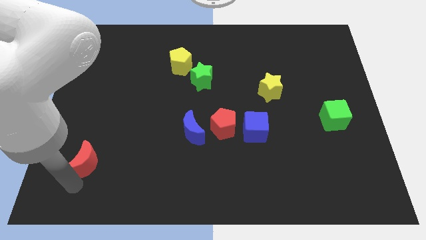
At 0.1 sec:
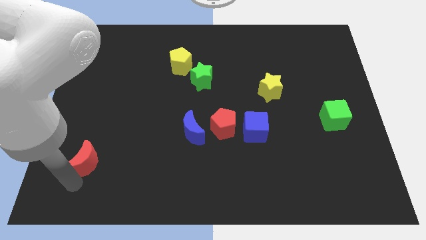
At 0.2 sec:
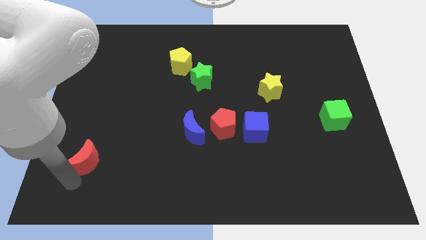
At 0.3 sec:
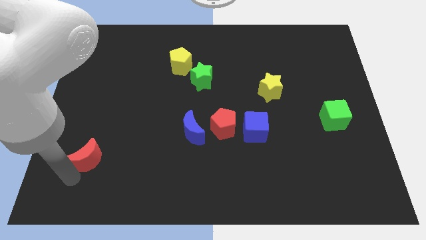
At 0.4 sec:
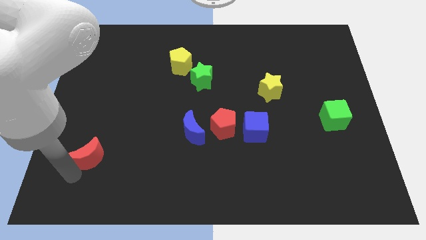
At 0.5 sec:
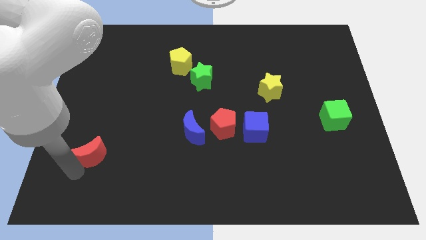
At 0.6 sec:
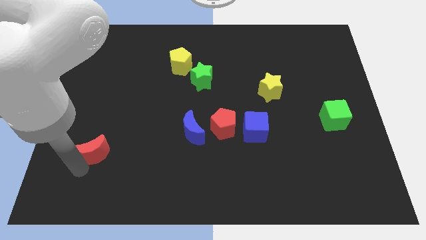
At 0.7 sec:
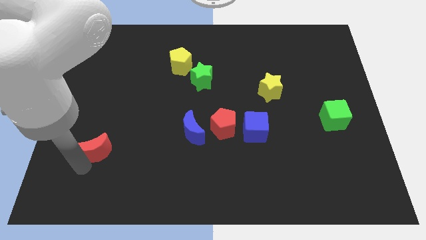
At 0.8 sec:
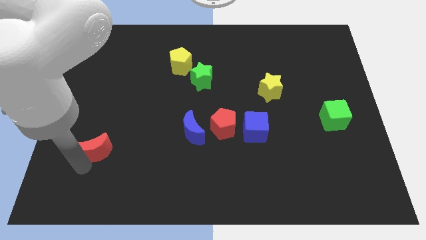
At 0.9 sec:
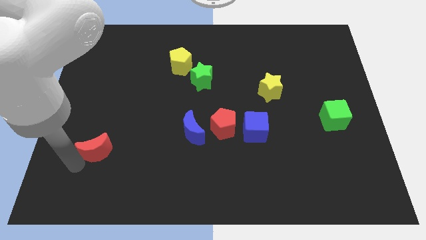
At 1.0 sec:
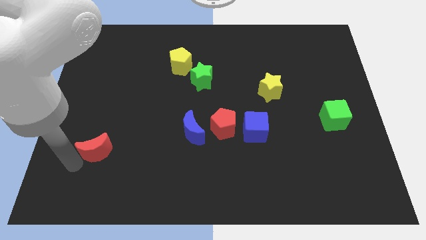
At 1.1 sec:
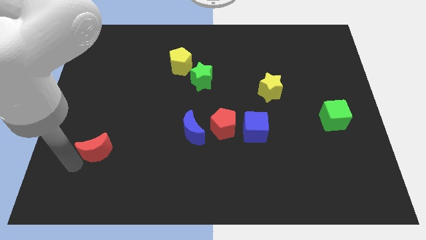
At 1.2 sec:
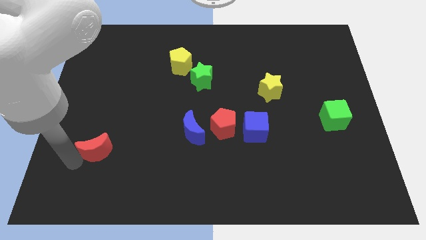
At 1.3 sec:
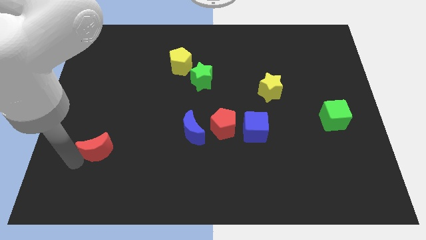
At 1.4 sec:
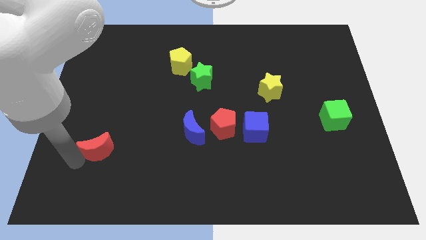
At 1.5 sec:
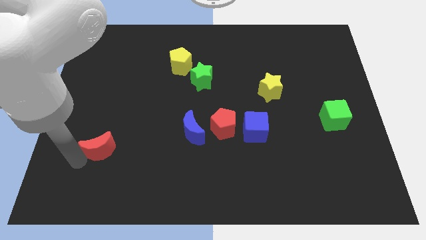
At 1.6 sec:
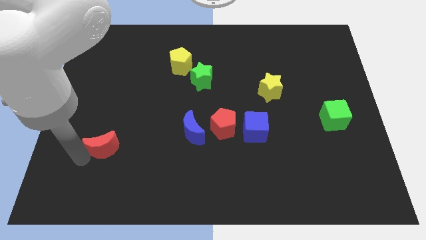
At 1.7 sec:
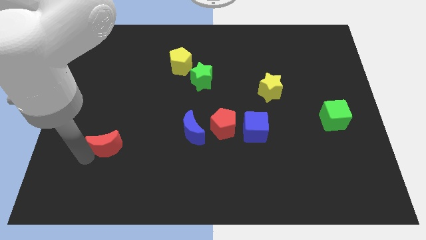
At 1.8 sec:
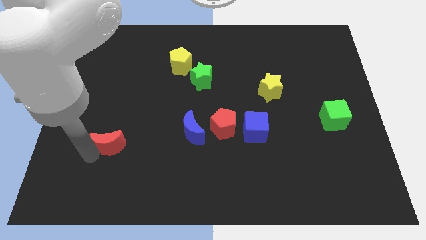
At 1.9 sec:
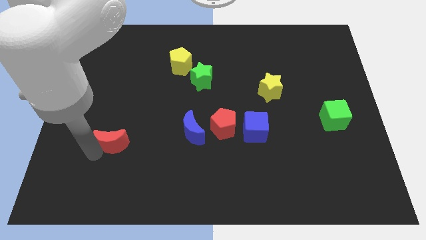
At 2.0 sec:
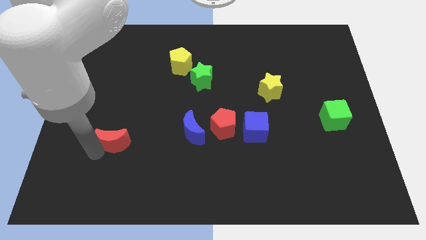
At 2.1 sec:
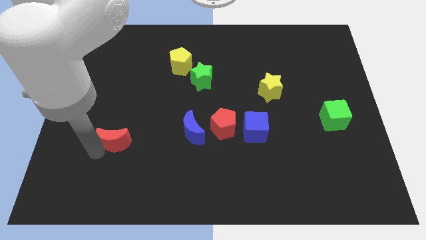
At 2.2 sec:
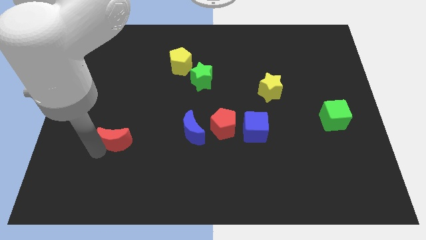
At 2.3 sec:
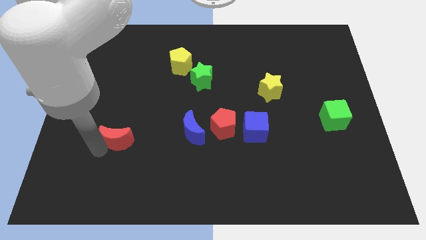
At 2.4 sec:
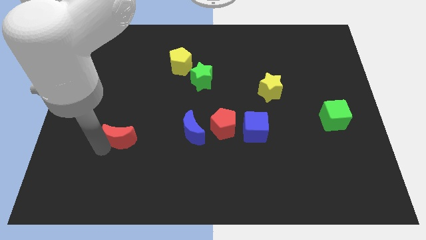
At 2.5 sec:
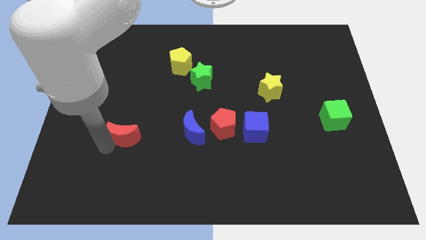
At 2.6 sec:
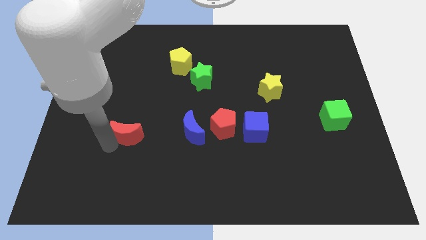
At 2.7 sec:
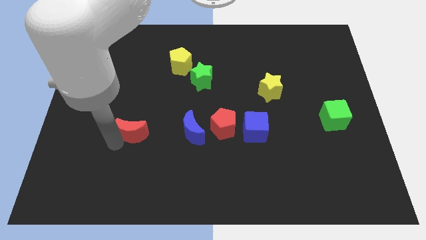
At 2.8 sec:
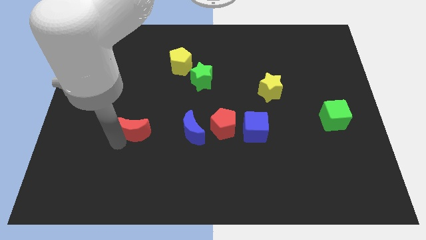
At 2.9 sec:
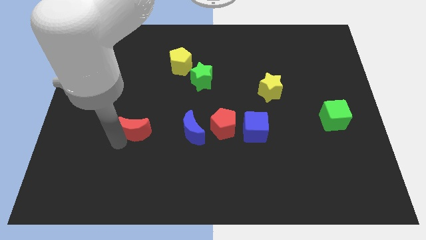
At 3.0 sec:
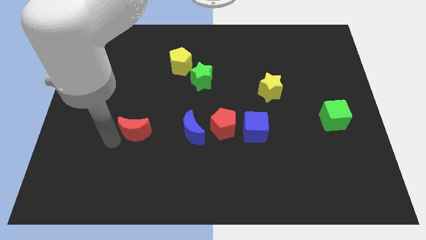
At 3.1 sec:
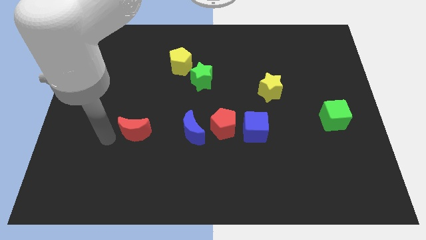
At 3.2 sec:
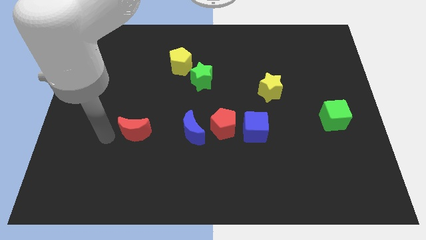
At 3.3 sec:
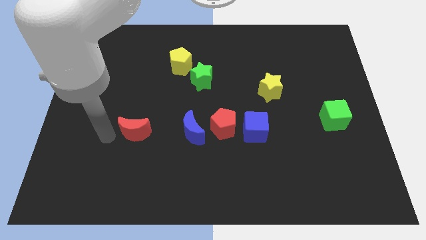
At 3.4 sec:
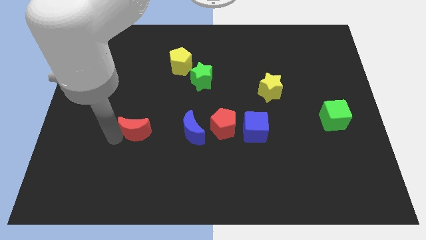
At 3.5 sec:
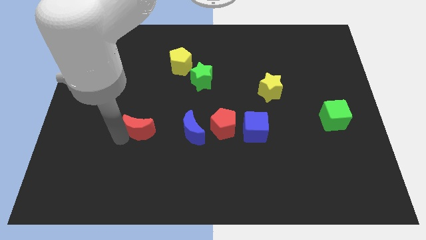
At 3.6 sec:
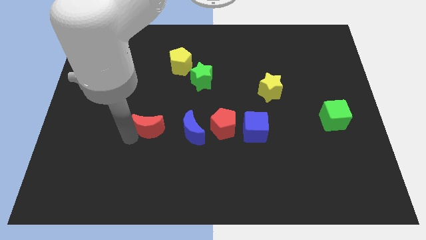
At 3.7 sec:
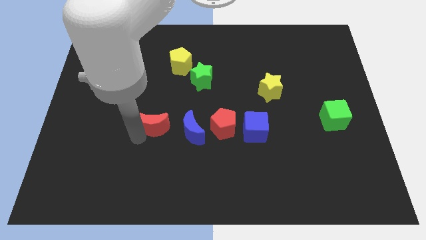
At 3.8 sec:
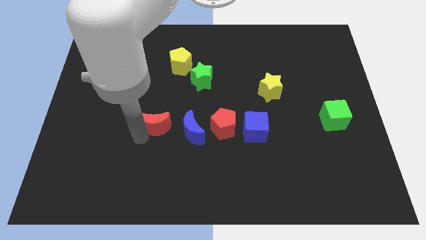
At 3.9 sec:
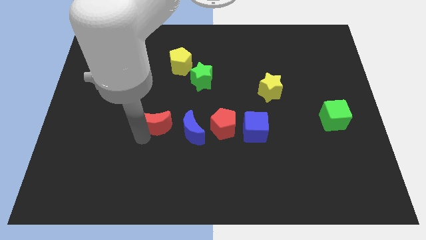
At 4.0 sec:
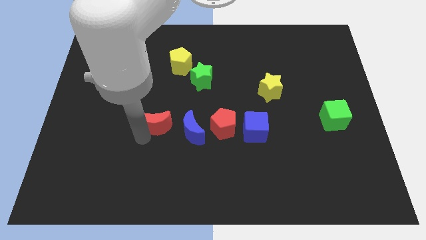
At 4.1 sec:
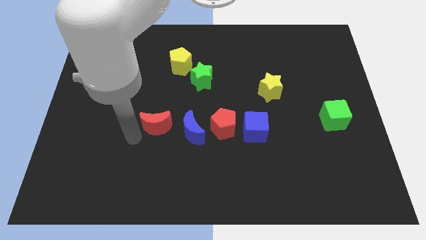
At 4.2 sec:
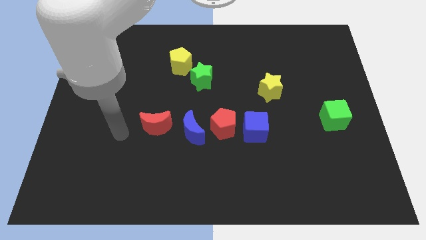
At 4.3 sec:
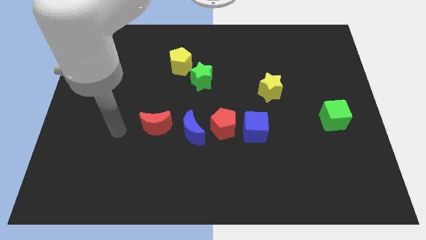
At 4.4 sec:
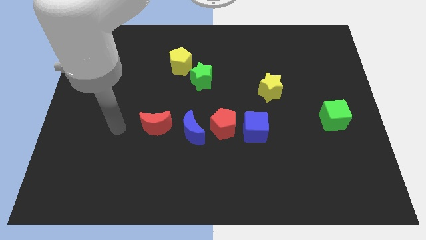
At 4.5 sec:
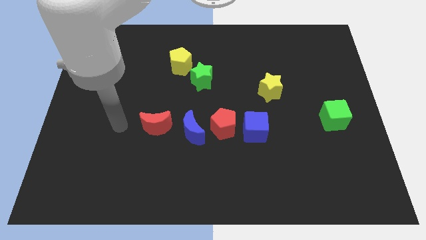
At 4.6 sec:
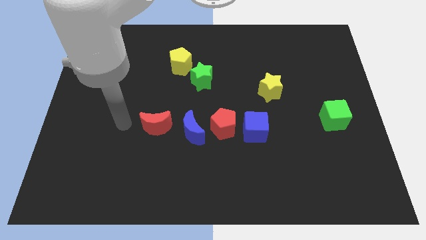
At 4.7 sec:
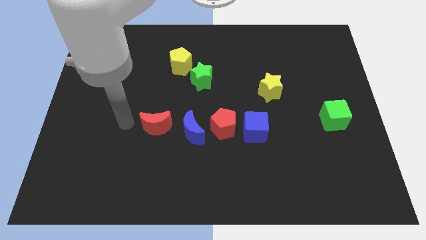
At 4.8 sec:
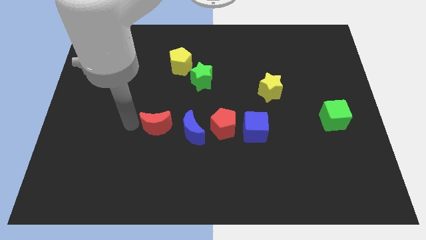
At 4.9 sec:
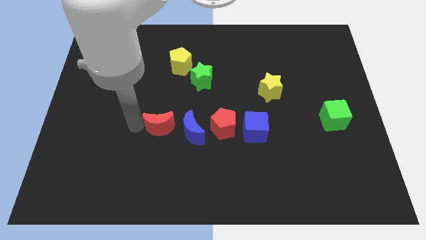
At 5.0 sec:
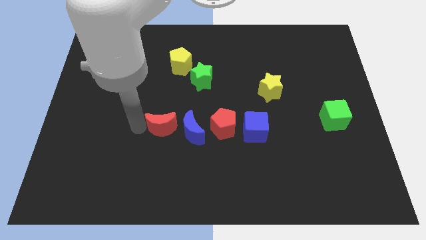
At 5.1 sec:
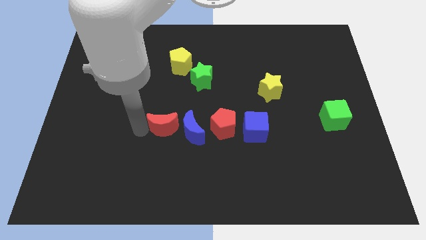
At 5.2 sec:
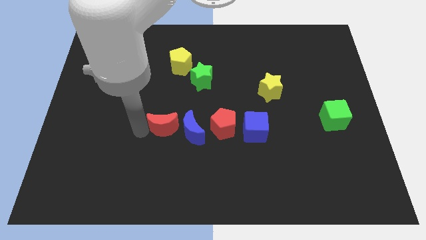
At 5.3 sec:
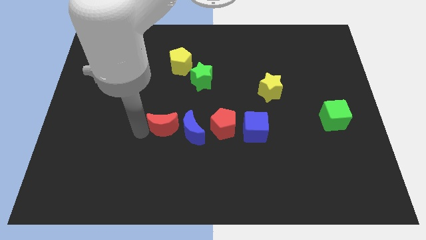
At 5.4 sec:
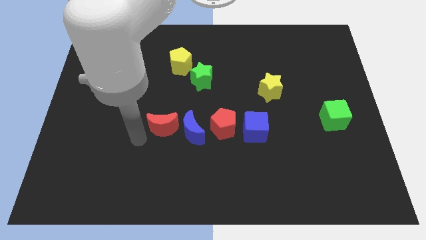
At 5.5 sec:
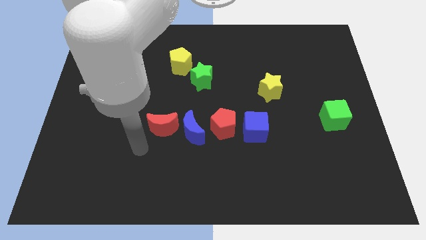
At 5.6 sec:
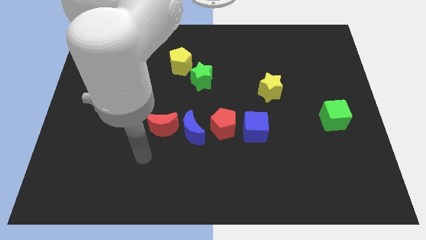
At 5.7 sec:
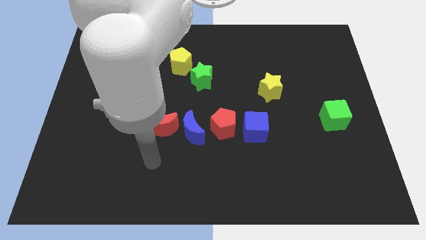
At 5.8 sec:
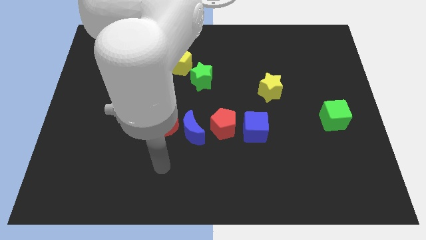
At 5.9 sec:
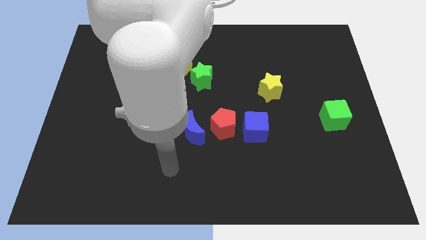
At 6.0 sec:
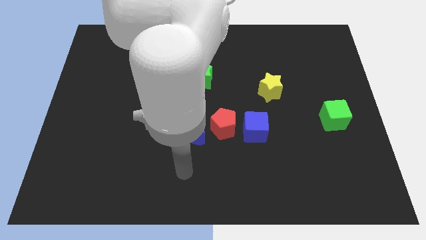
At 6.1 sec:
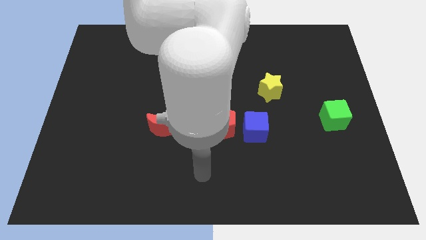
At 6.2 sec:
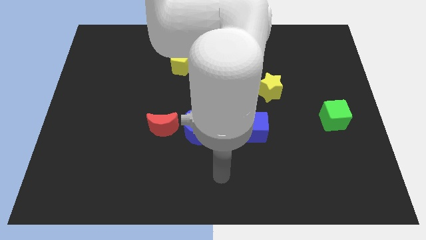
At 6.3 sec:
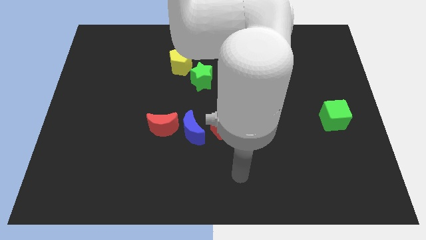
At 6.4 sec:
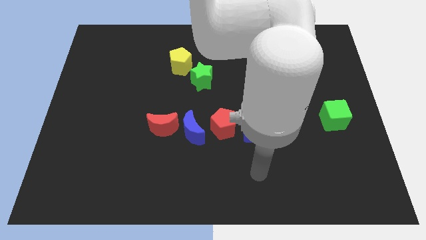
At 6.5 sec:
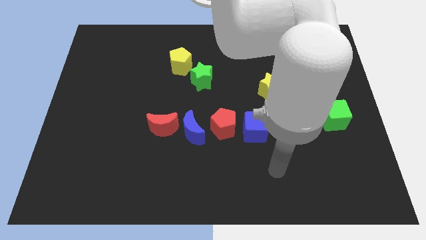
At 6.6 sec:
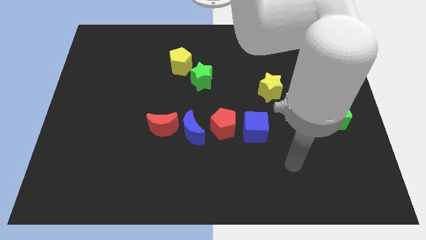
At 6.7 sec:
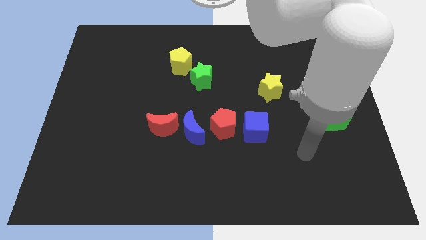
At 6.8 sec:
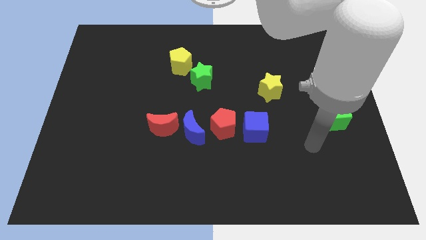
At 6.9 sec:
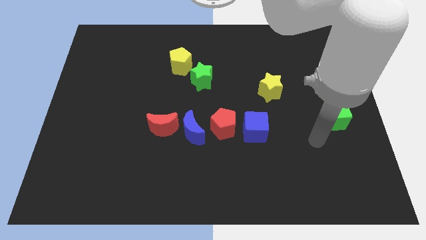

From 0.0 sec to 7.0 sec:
move the red moon to the left side of the blue moon

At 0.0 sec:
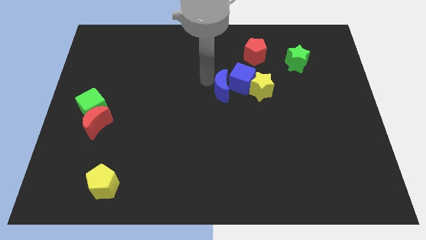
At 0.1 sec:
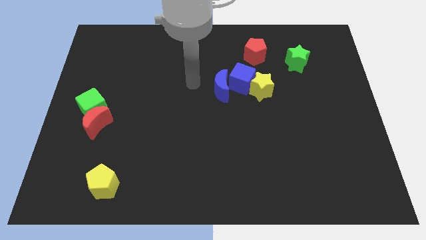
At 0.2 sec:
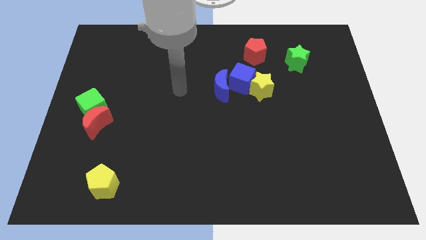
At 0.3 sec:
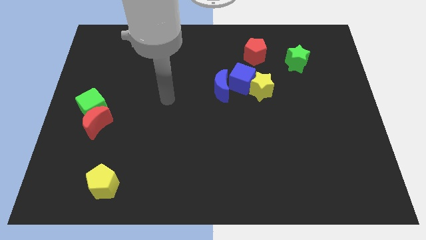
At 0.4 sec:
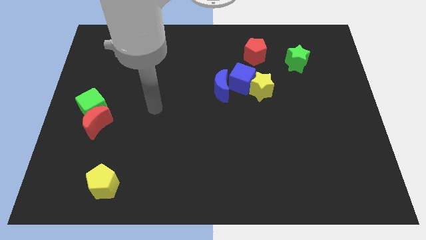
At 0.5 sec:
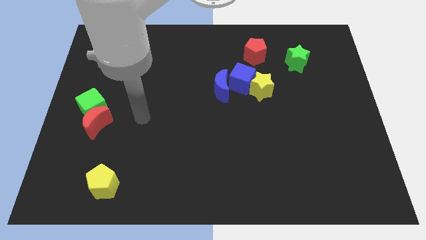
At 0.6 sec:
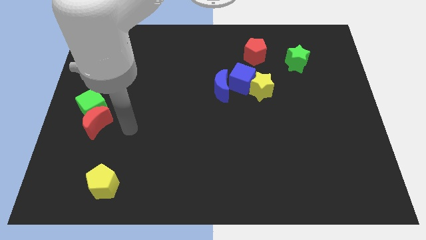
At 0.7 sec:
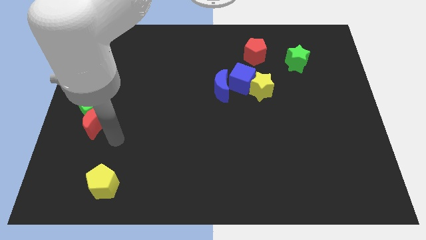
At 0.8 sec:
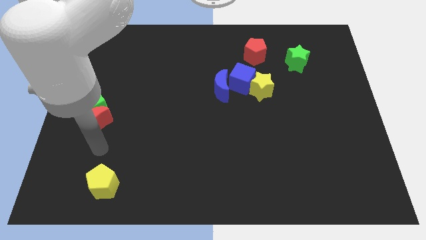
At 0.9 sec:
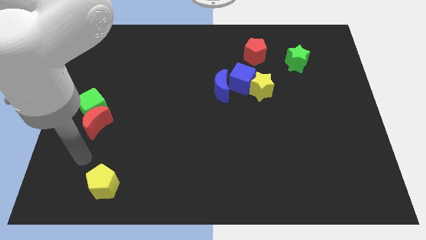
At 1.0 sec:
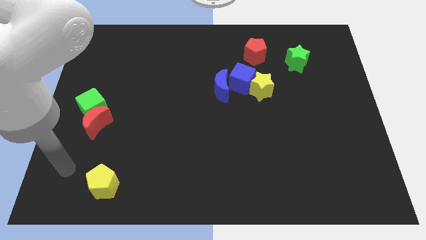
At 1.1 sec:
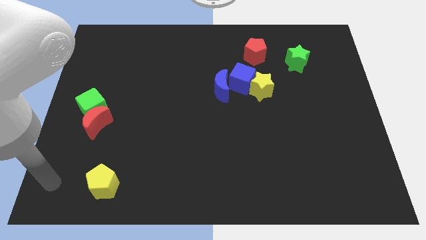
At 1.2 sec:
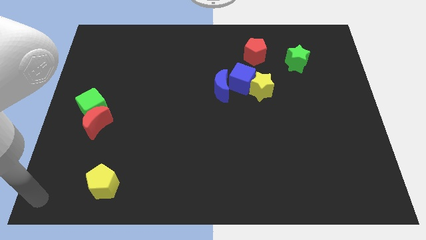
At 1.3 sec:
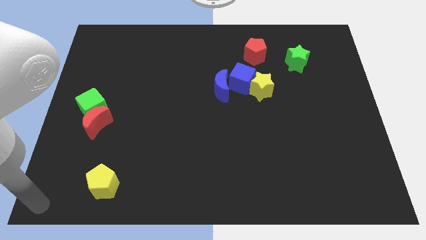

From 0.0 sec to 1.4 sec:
put your arm at the bottom left corner

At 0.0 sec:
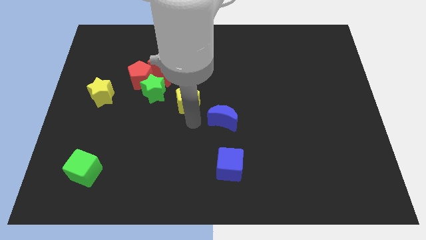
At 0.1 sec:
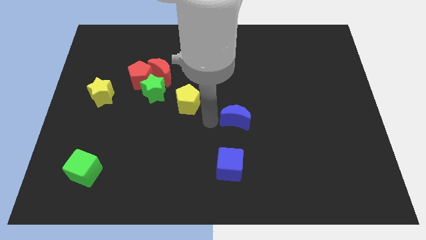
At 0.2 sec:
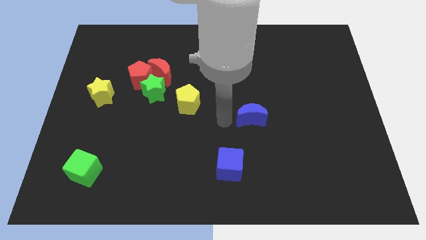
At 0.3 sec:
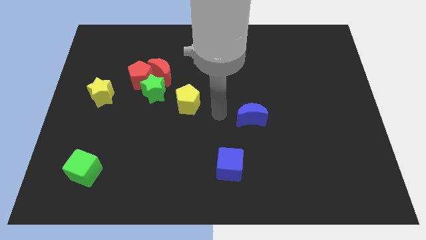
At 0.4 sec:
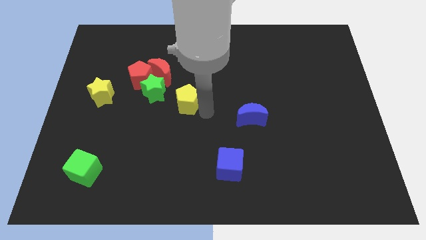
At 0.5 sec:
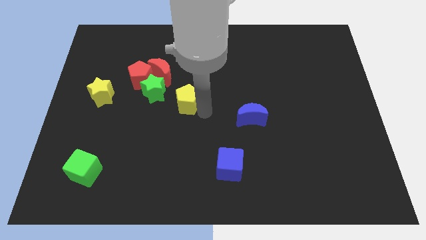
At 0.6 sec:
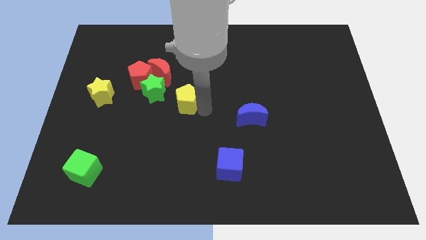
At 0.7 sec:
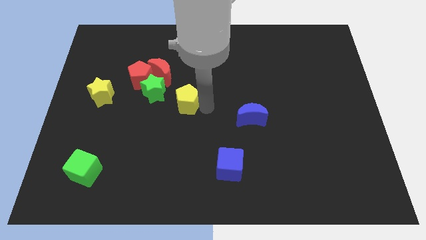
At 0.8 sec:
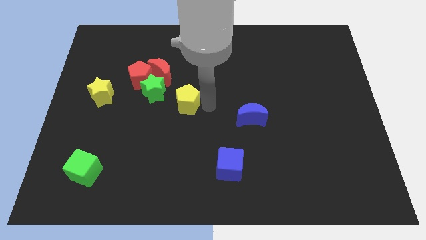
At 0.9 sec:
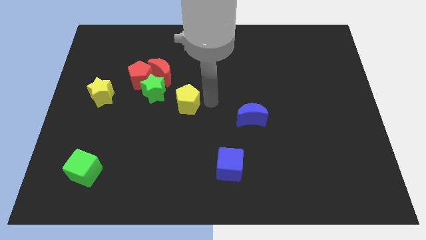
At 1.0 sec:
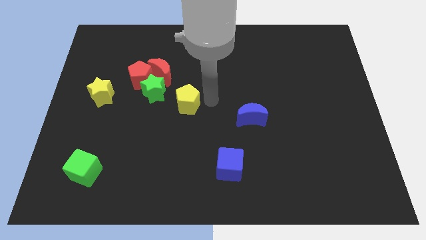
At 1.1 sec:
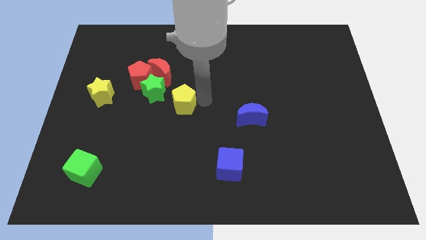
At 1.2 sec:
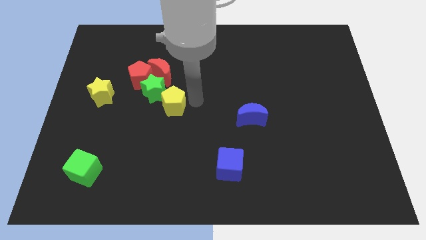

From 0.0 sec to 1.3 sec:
push the blue crescent towards the right of the board
